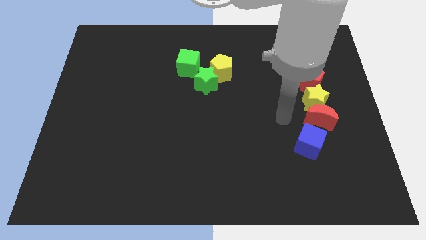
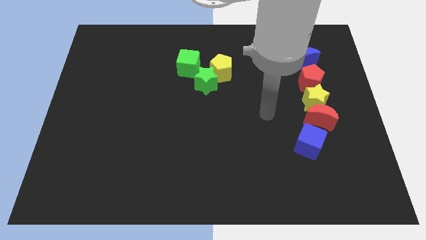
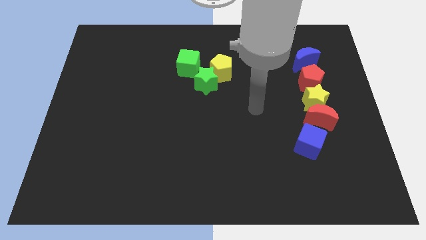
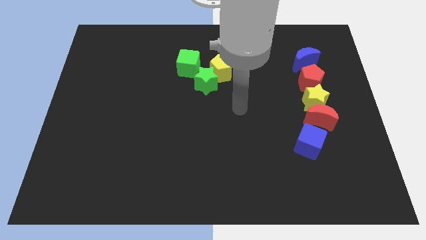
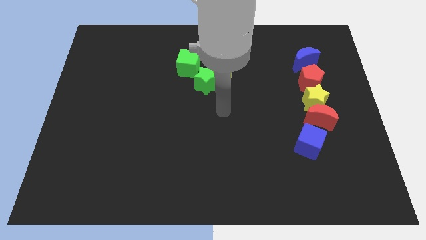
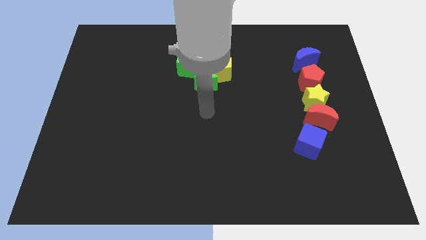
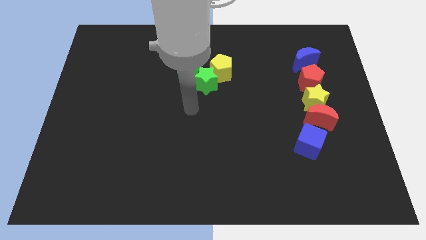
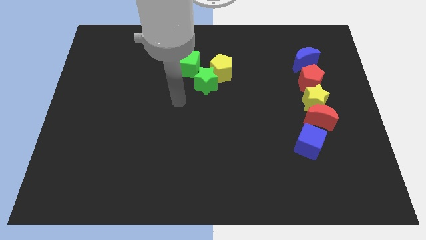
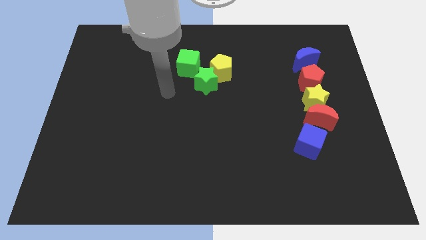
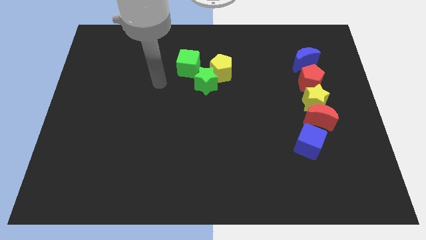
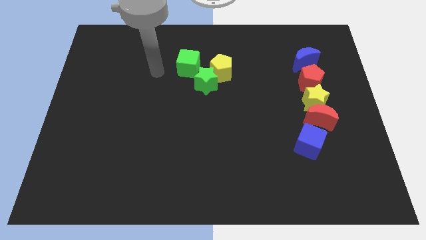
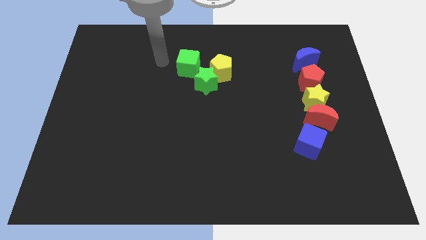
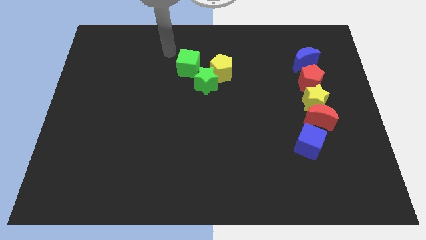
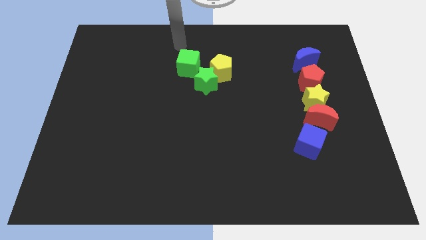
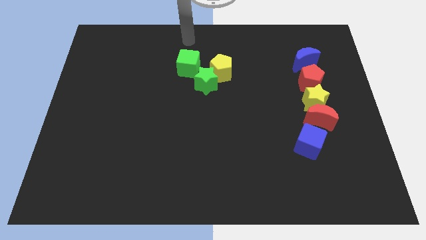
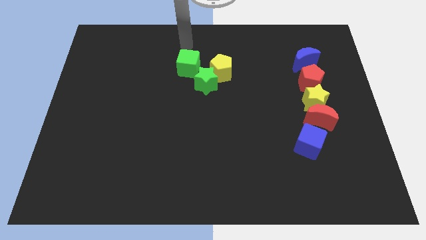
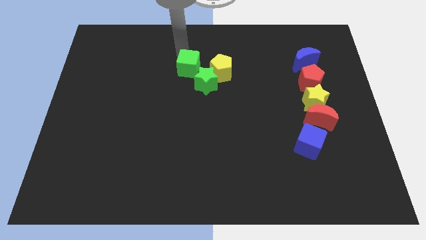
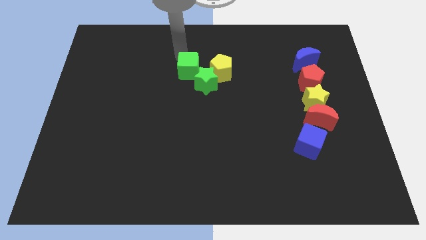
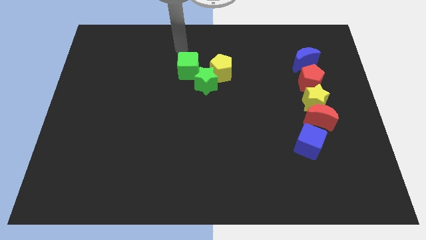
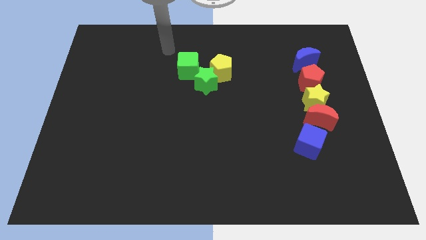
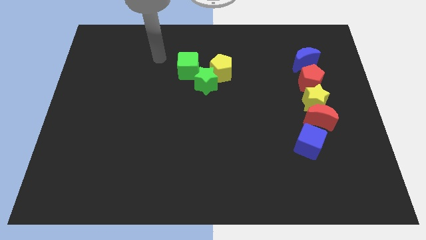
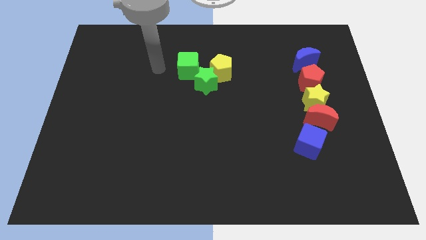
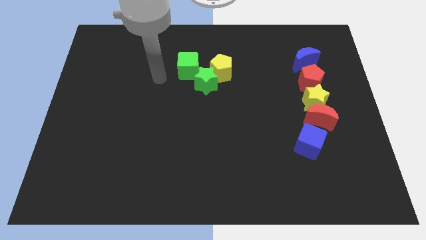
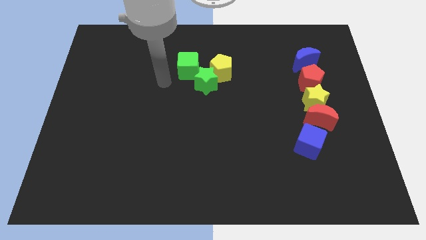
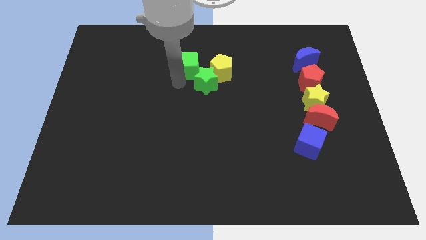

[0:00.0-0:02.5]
slide the green cube down slightly

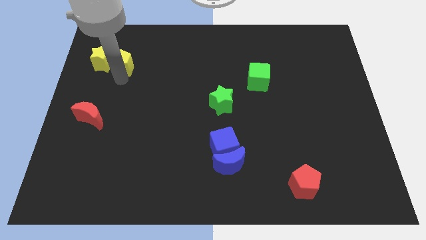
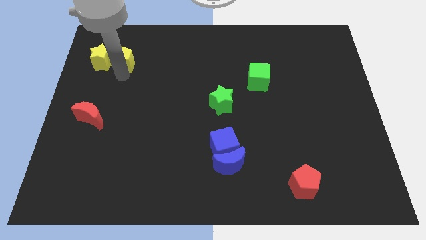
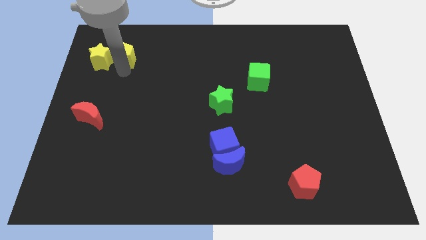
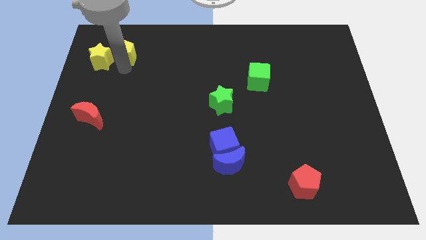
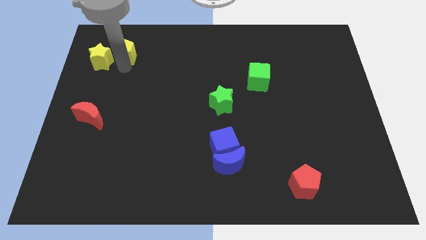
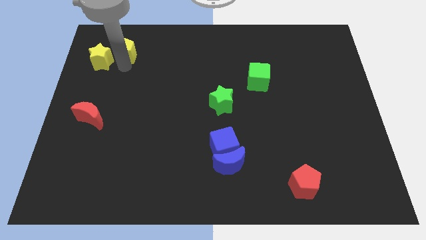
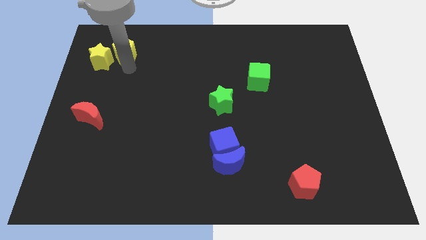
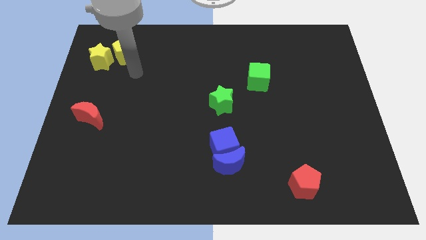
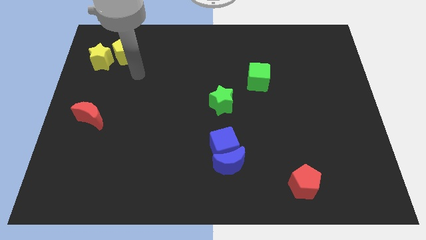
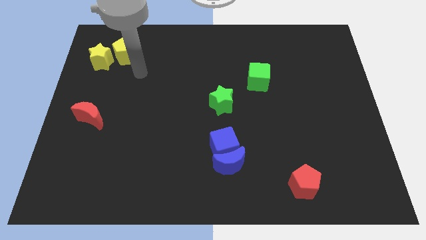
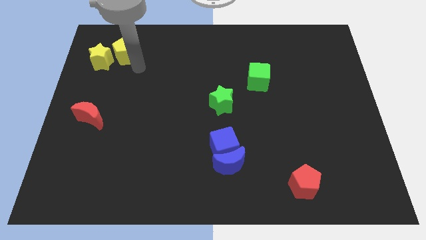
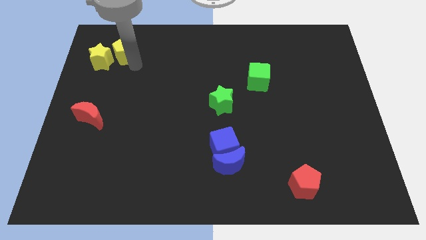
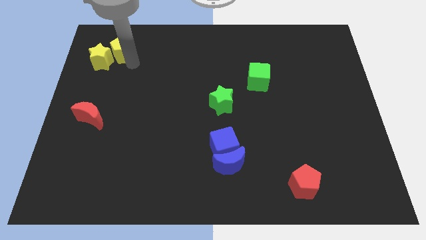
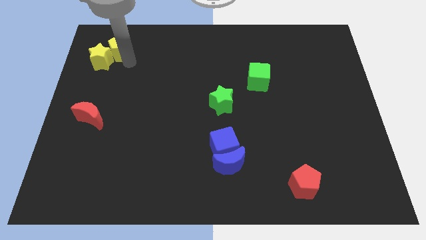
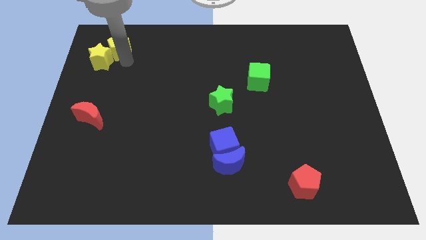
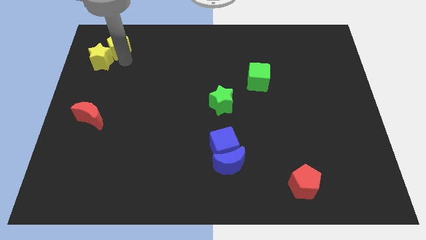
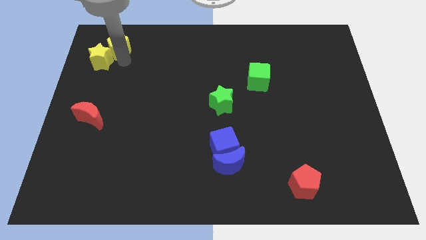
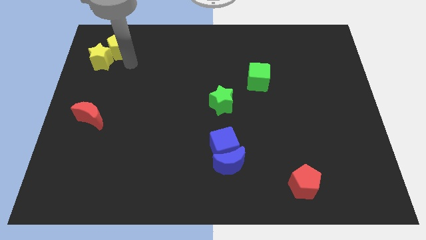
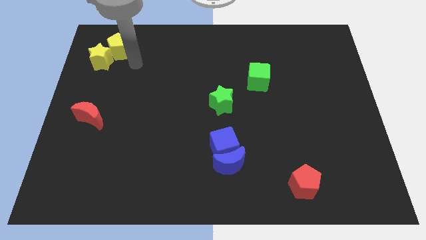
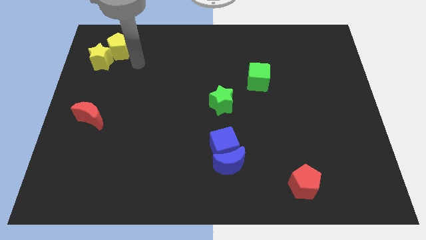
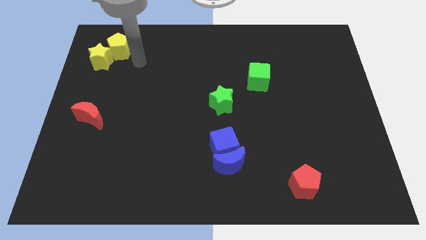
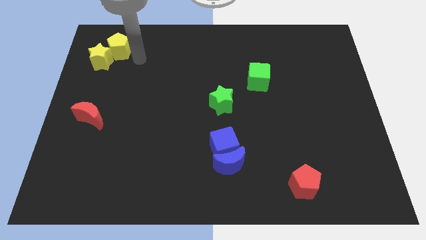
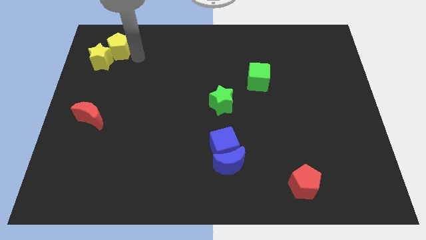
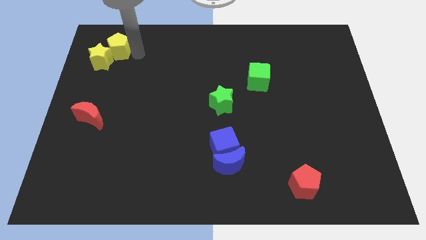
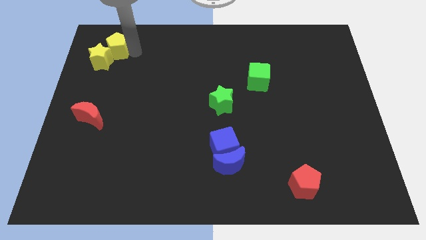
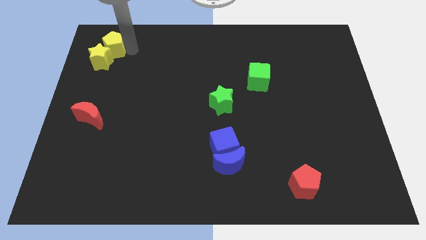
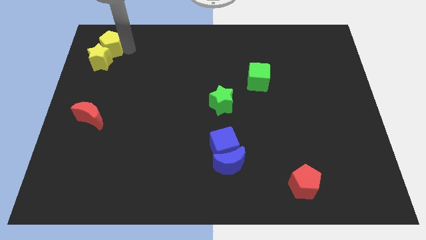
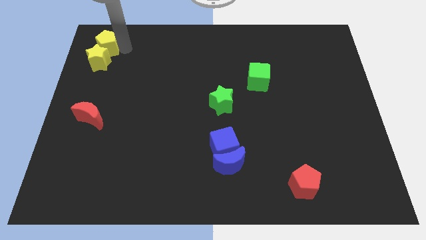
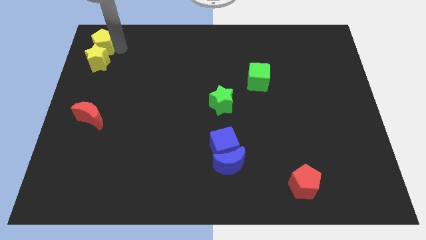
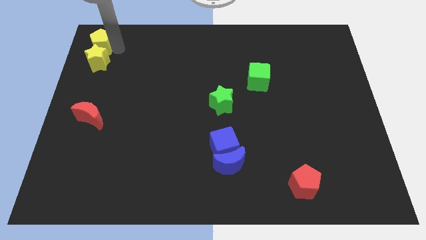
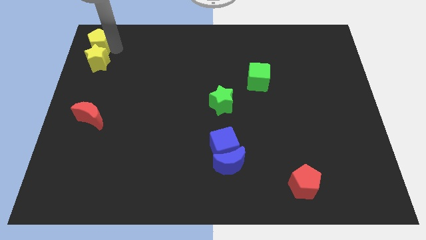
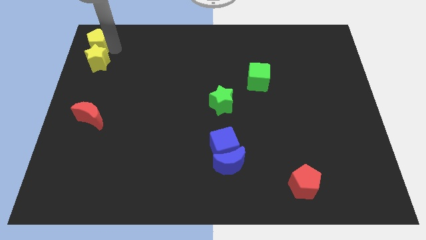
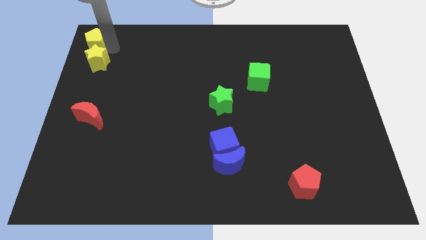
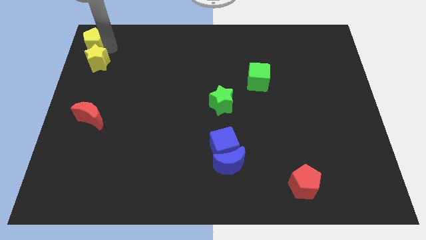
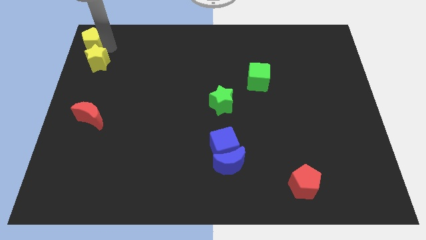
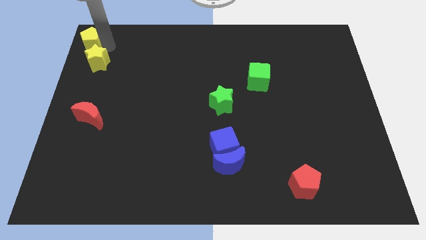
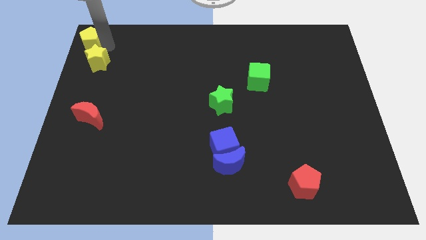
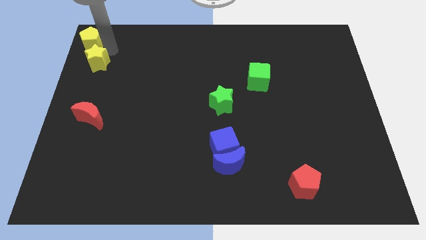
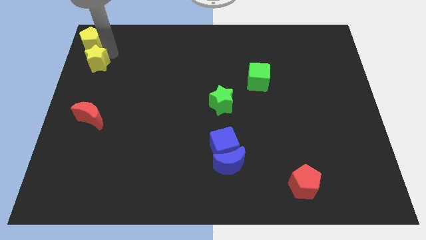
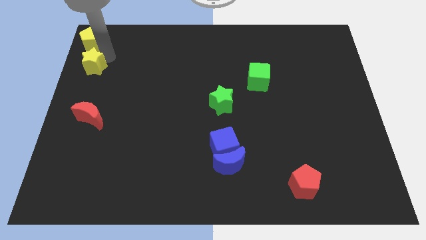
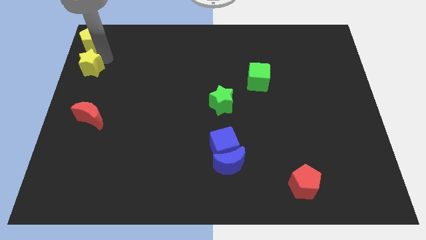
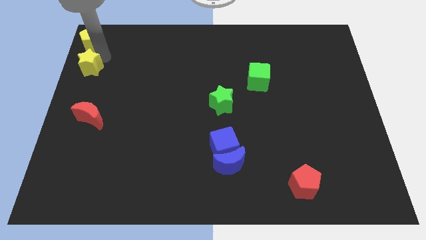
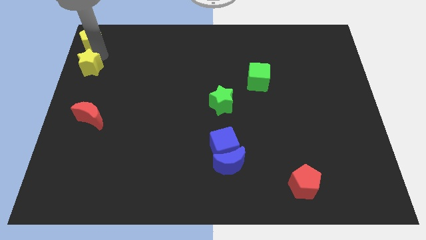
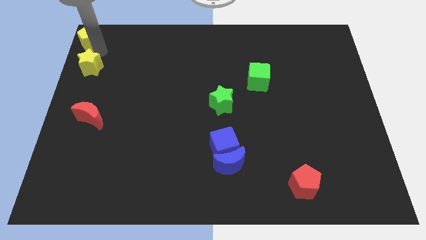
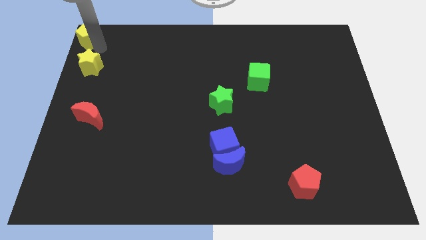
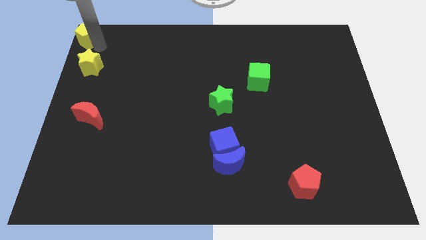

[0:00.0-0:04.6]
place the yellow pentagon above the yellow star

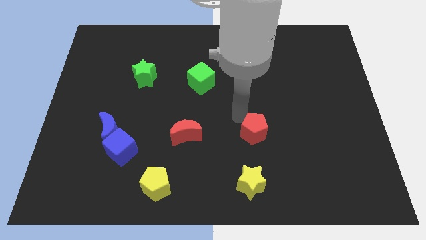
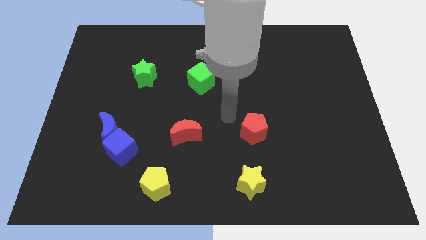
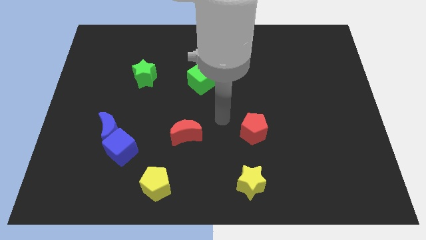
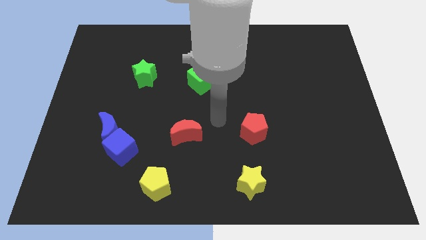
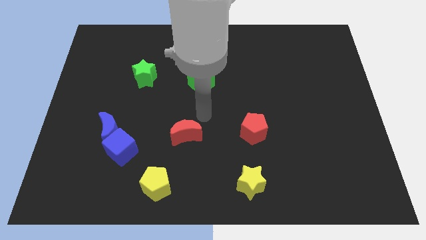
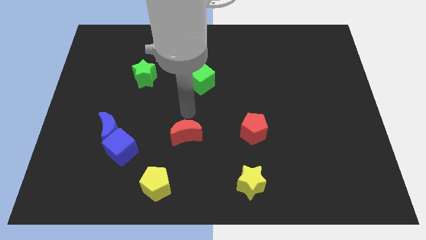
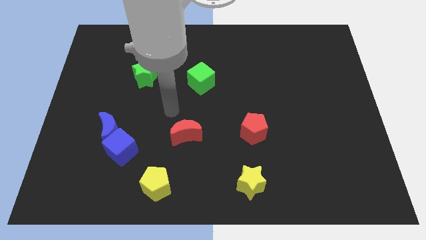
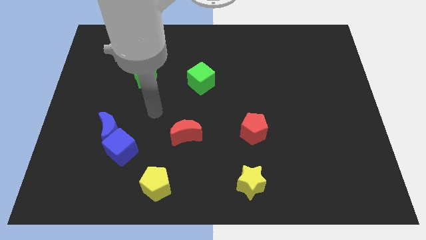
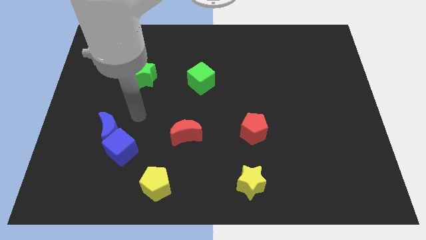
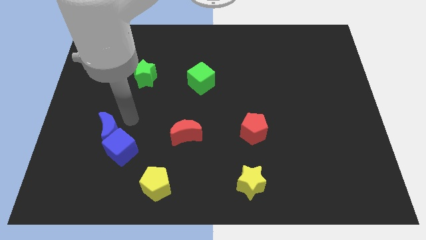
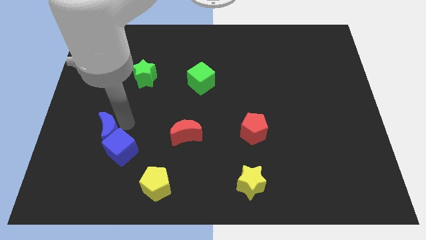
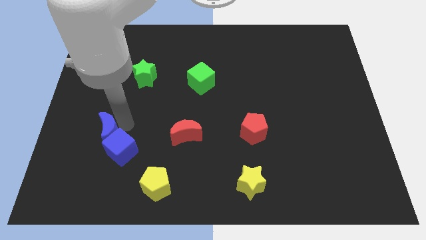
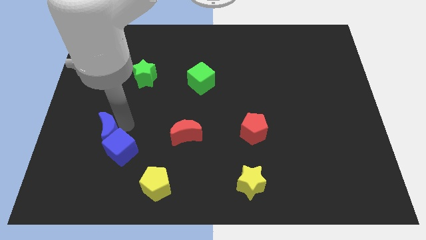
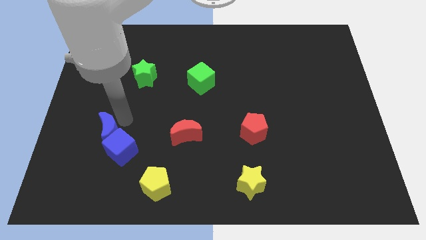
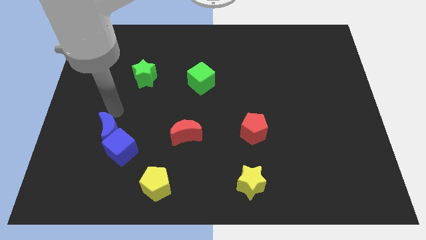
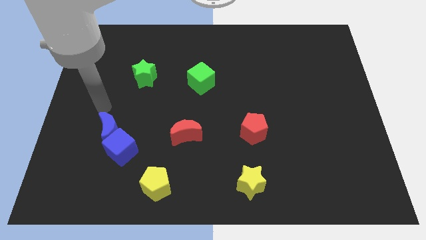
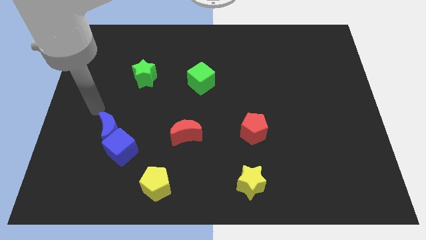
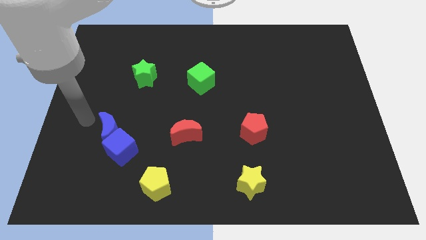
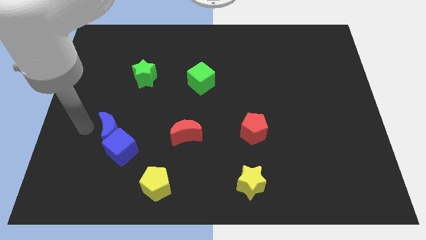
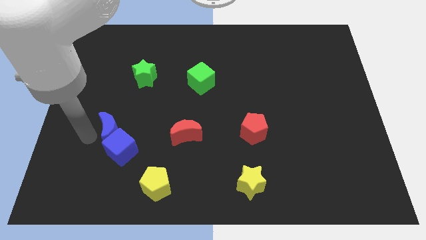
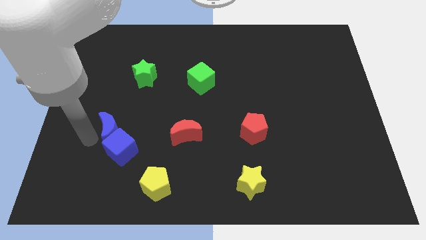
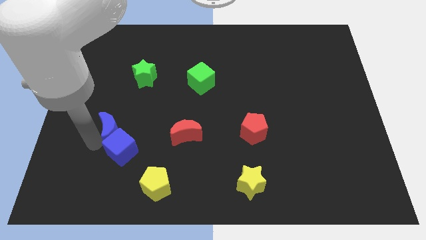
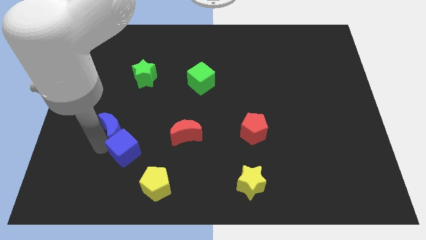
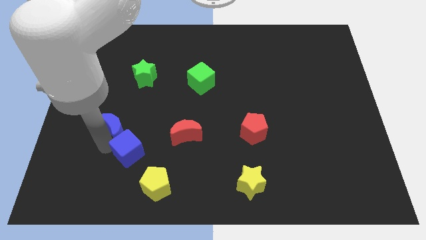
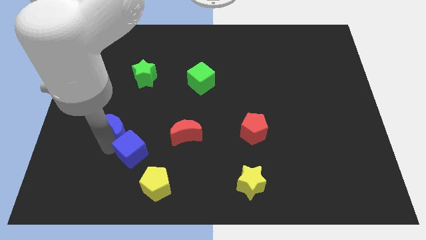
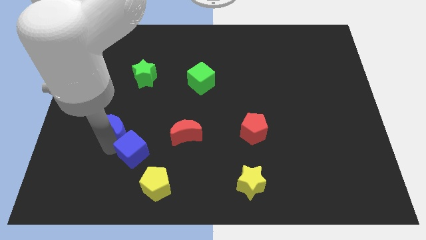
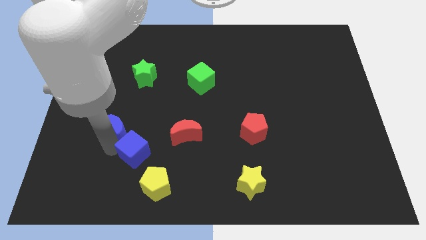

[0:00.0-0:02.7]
move the arm away from the red pentagon
